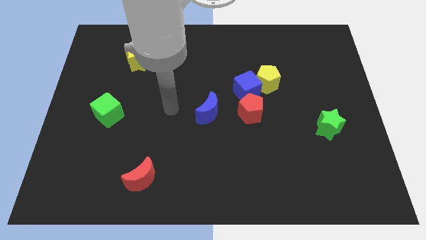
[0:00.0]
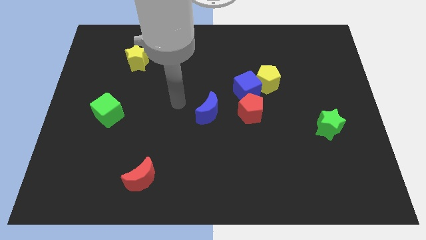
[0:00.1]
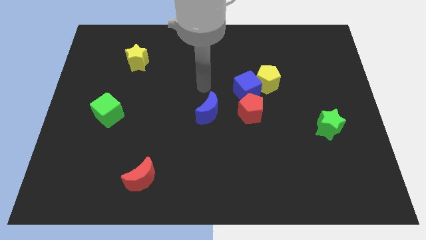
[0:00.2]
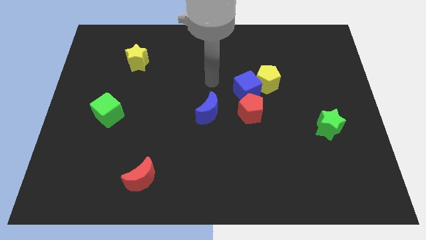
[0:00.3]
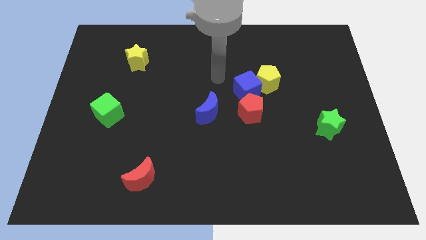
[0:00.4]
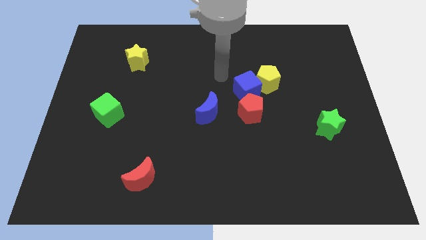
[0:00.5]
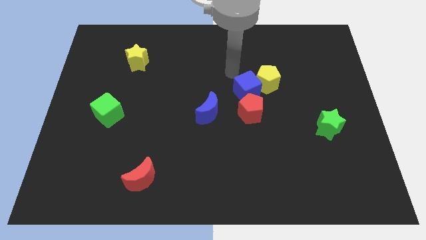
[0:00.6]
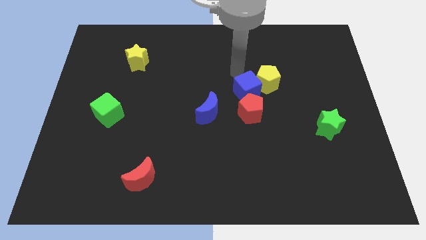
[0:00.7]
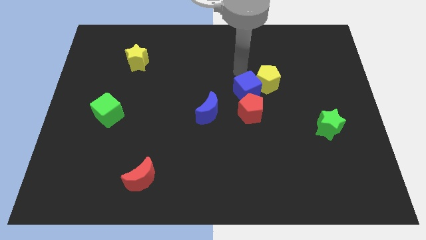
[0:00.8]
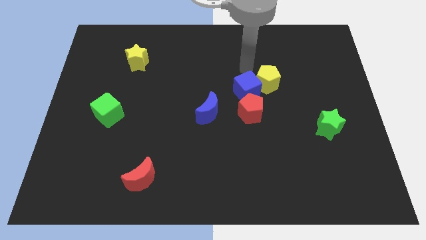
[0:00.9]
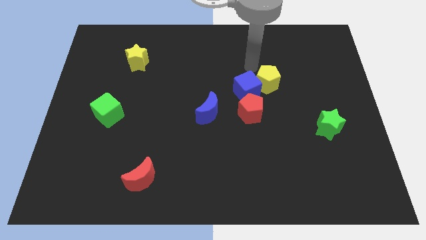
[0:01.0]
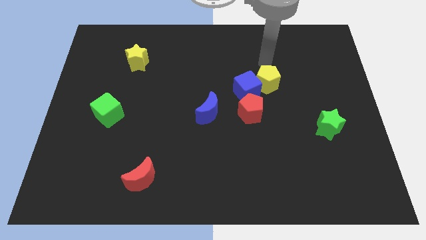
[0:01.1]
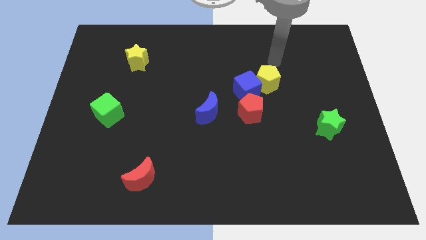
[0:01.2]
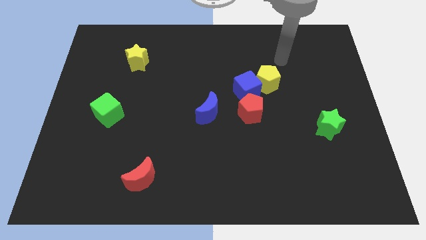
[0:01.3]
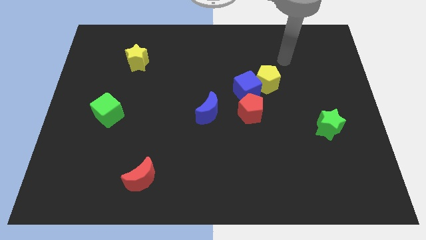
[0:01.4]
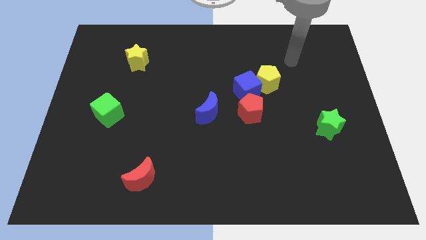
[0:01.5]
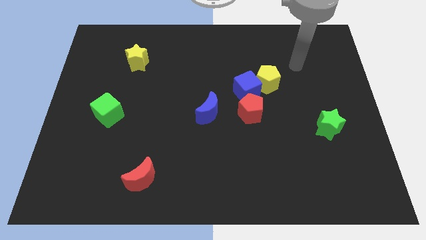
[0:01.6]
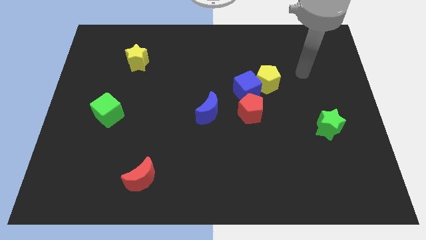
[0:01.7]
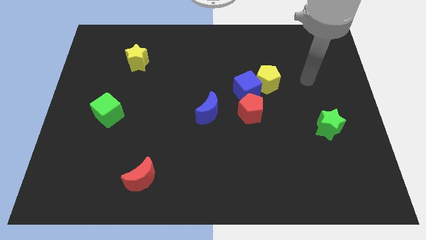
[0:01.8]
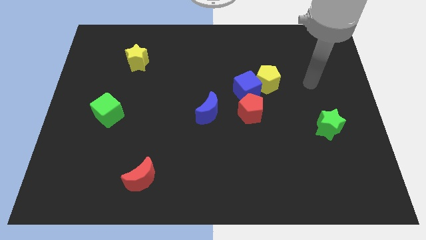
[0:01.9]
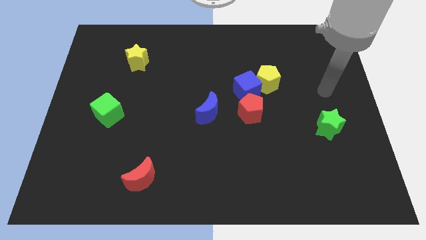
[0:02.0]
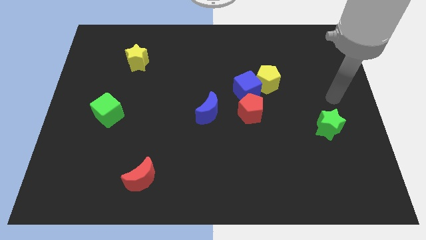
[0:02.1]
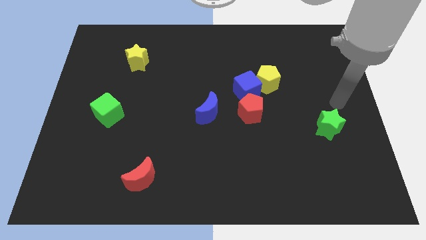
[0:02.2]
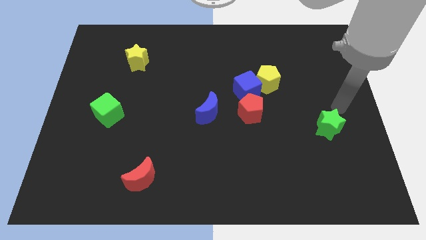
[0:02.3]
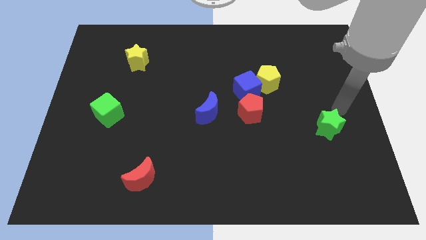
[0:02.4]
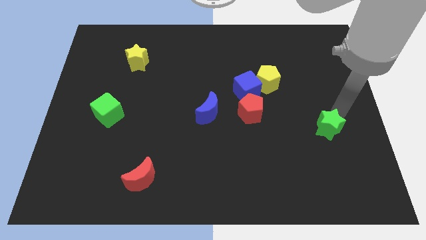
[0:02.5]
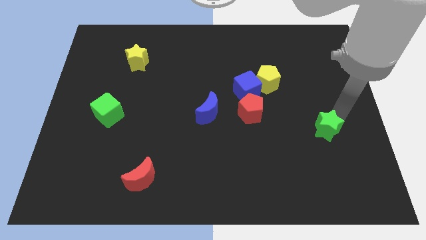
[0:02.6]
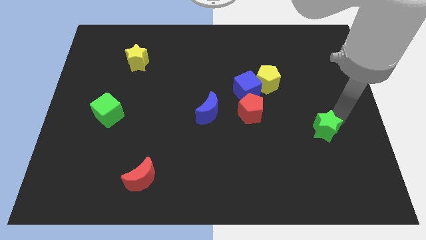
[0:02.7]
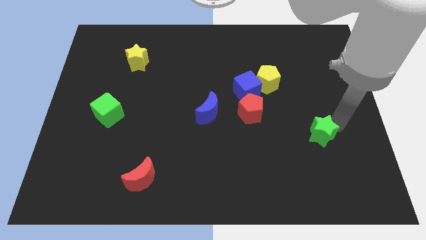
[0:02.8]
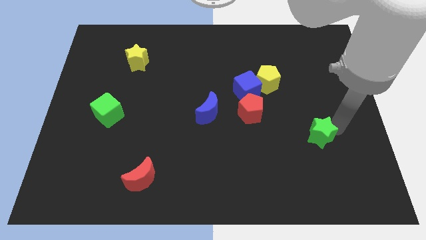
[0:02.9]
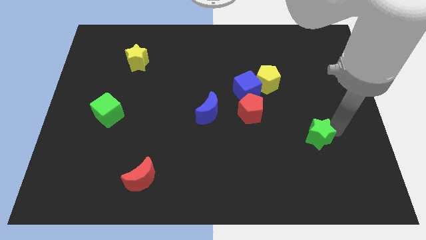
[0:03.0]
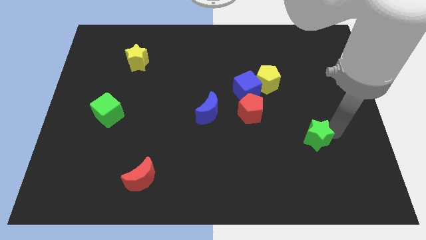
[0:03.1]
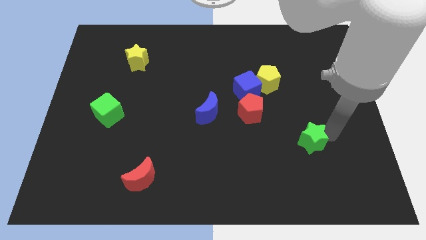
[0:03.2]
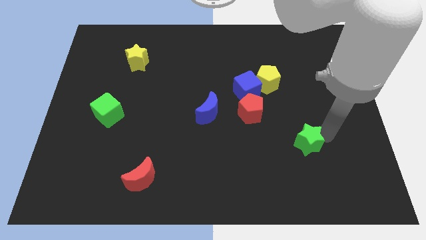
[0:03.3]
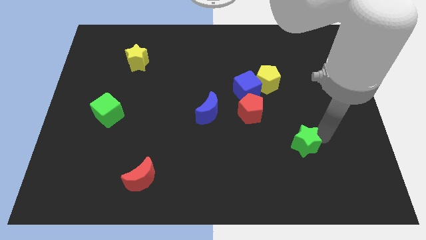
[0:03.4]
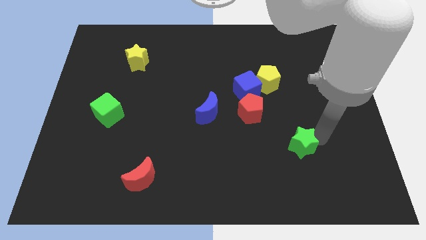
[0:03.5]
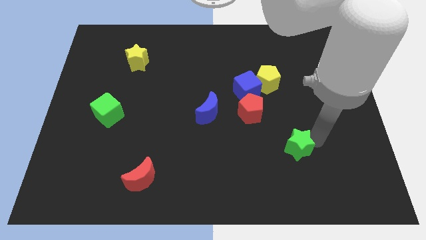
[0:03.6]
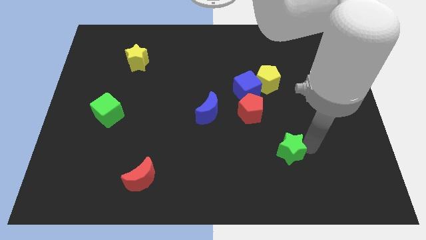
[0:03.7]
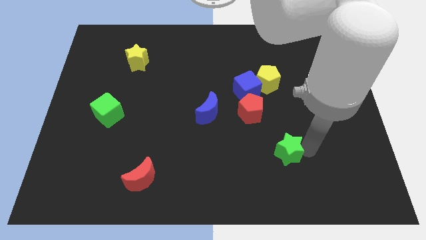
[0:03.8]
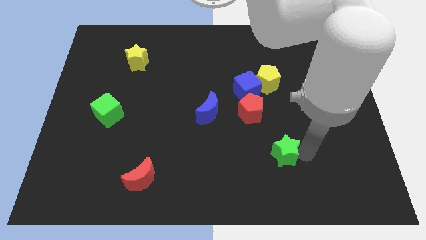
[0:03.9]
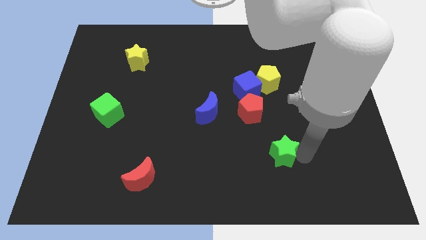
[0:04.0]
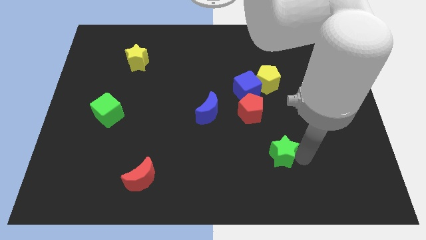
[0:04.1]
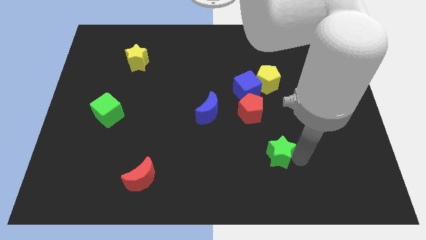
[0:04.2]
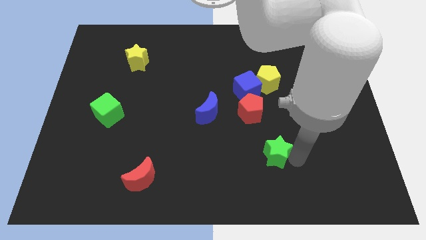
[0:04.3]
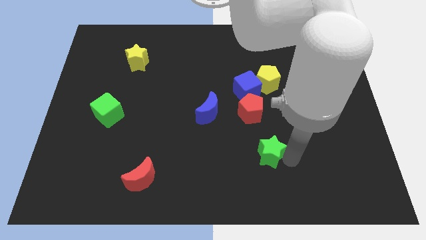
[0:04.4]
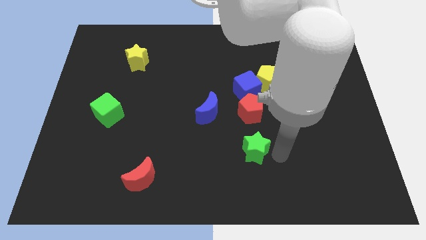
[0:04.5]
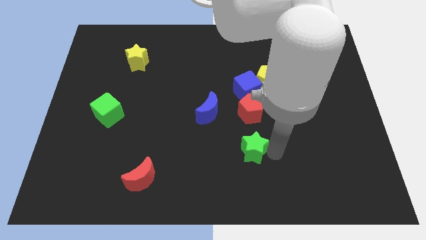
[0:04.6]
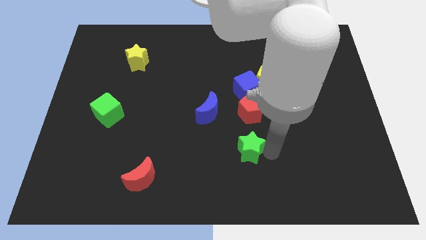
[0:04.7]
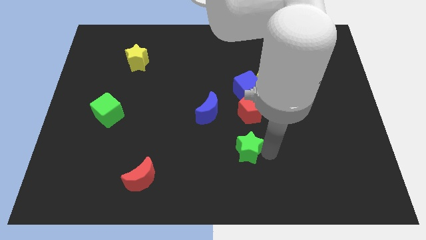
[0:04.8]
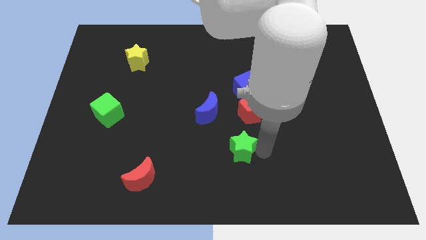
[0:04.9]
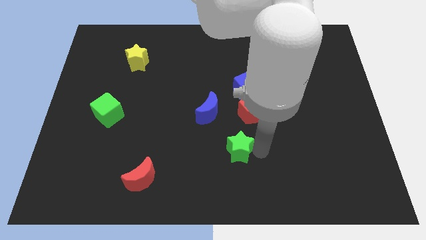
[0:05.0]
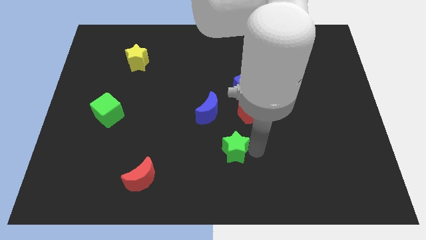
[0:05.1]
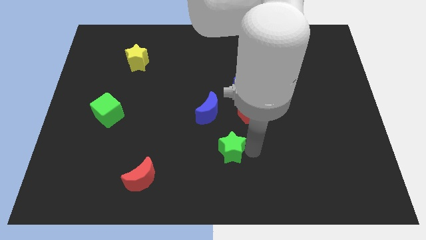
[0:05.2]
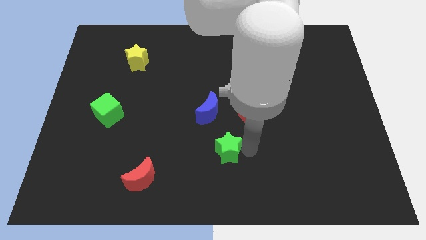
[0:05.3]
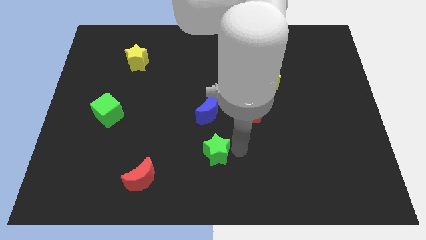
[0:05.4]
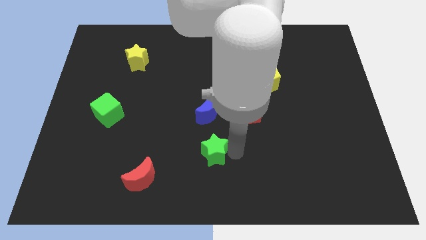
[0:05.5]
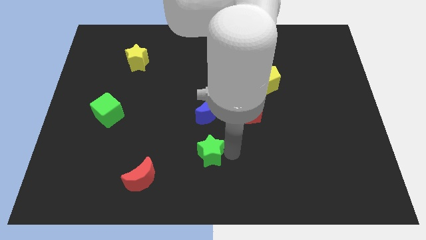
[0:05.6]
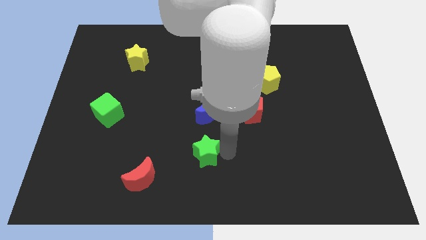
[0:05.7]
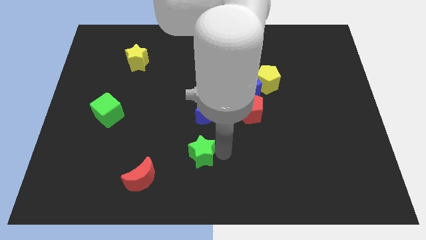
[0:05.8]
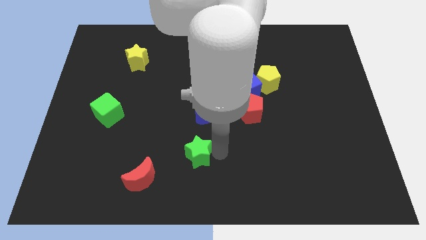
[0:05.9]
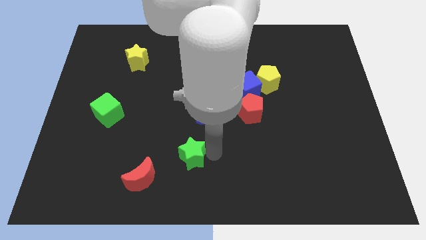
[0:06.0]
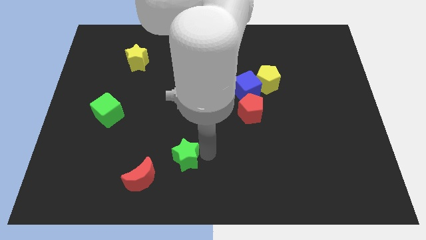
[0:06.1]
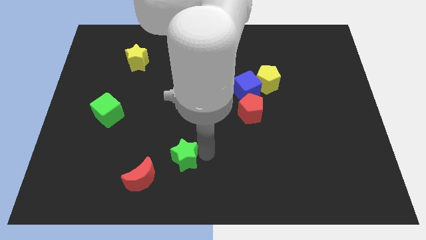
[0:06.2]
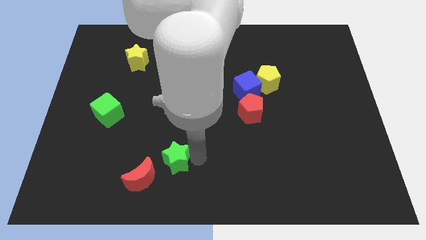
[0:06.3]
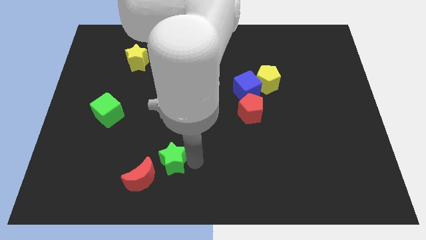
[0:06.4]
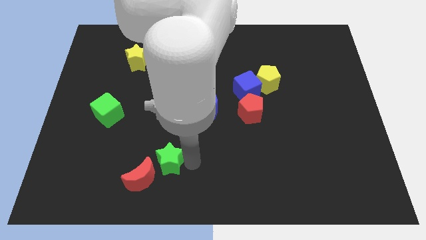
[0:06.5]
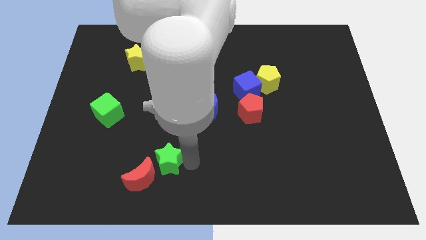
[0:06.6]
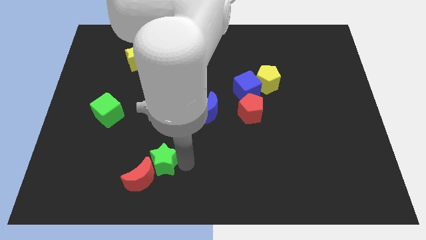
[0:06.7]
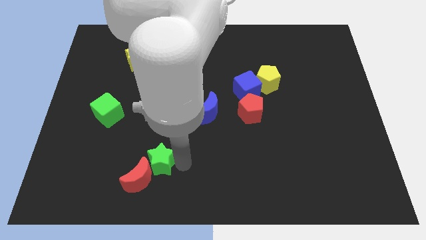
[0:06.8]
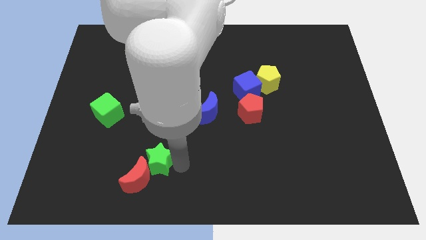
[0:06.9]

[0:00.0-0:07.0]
push the green star towards the red moon

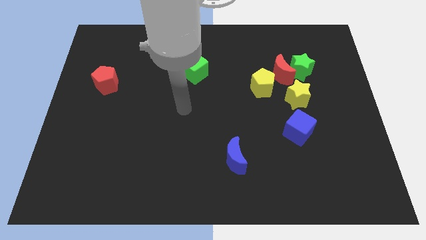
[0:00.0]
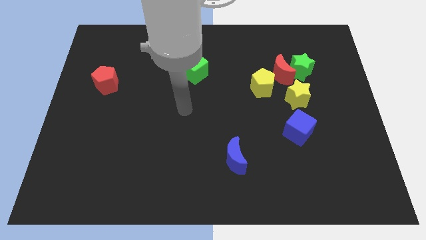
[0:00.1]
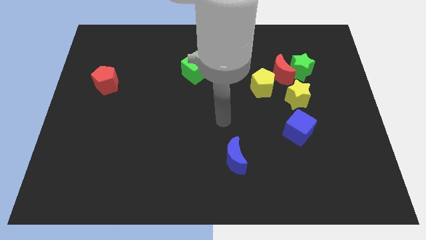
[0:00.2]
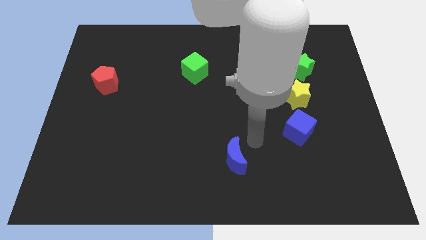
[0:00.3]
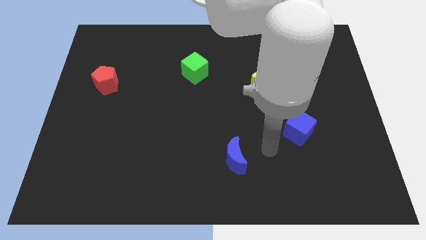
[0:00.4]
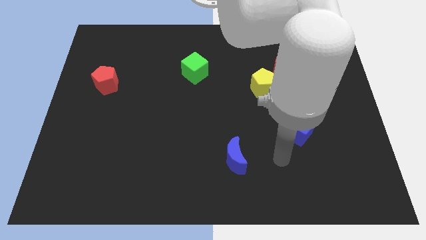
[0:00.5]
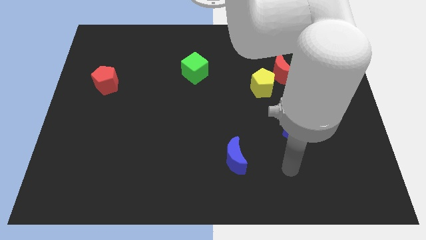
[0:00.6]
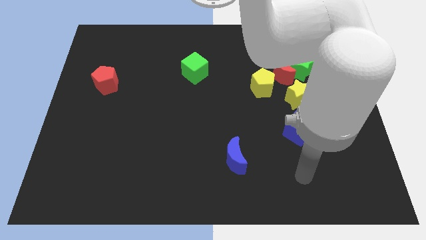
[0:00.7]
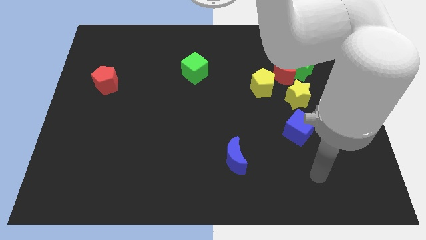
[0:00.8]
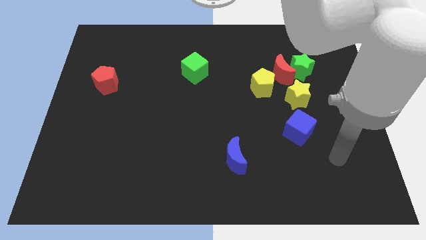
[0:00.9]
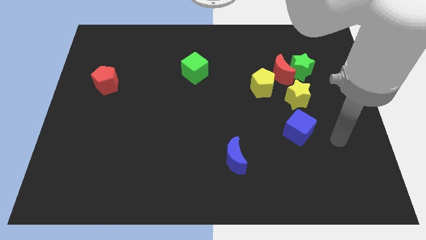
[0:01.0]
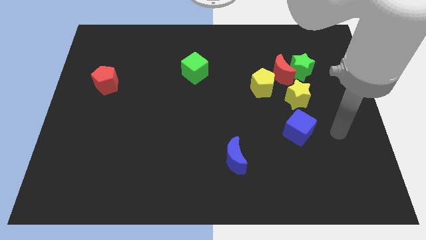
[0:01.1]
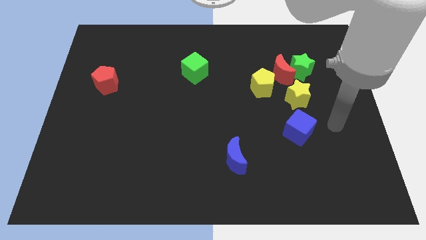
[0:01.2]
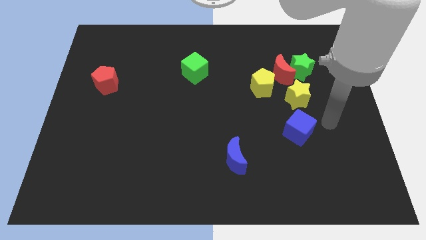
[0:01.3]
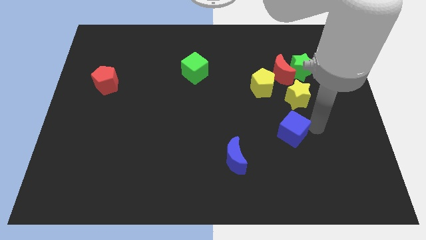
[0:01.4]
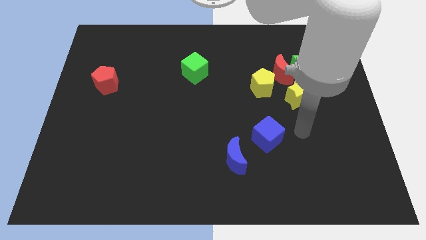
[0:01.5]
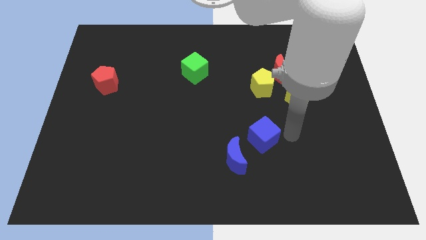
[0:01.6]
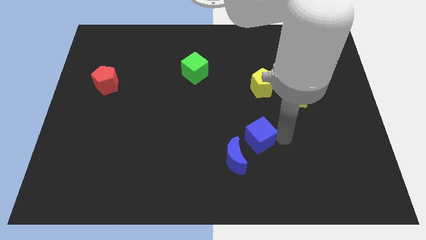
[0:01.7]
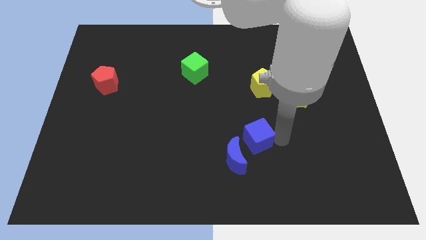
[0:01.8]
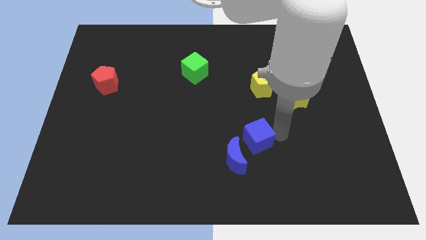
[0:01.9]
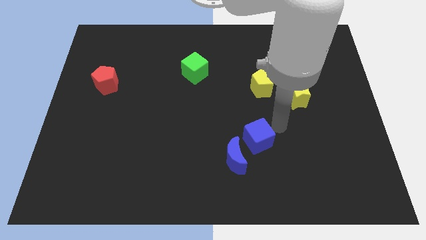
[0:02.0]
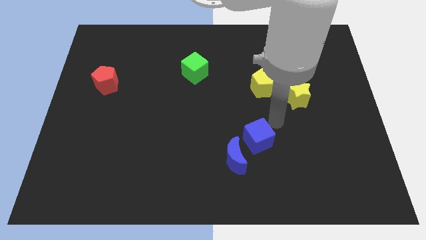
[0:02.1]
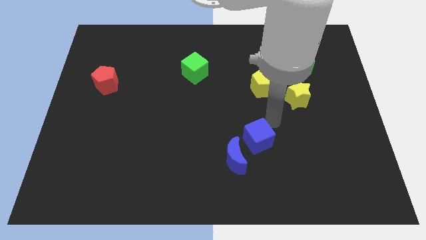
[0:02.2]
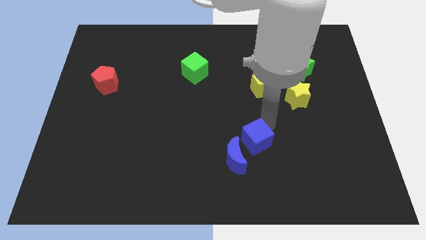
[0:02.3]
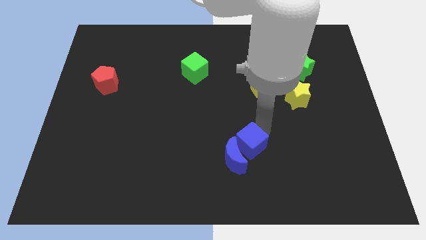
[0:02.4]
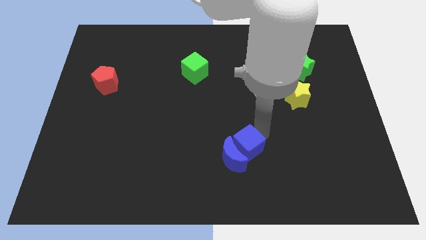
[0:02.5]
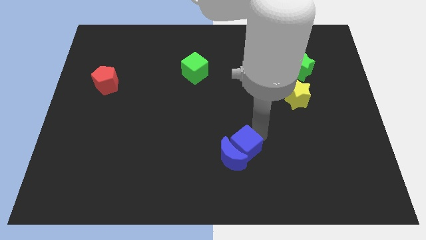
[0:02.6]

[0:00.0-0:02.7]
push the blue cube close to the blue moon
